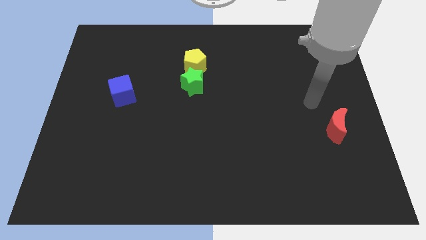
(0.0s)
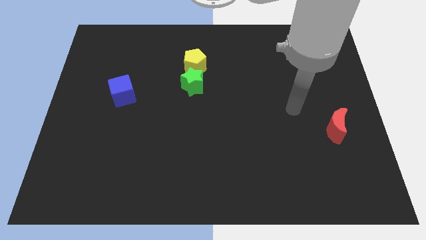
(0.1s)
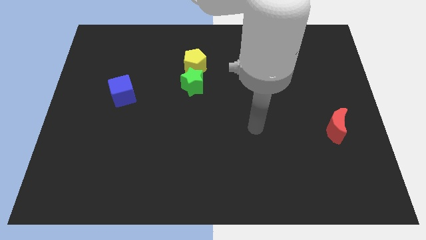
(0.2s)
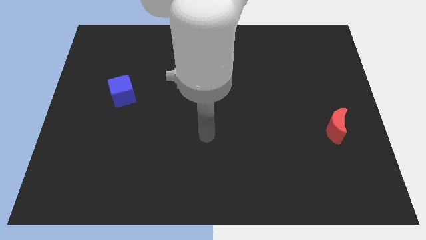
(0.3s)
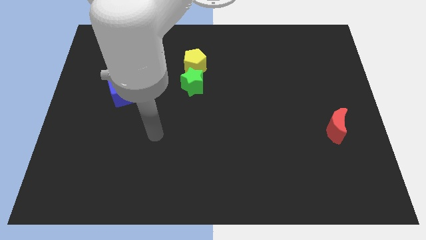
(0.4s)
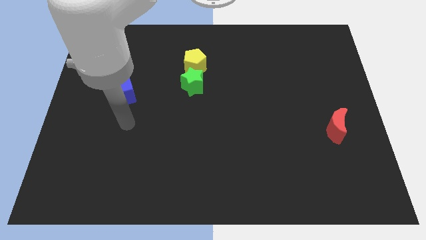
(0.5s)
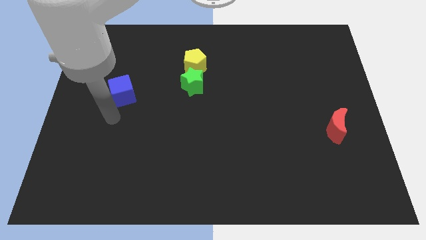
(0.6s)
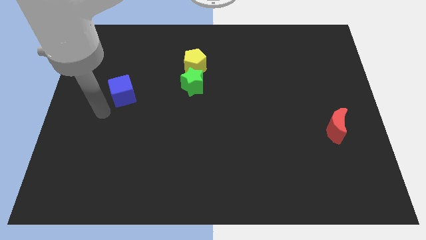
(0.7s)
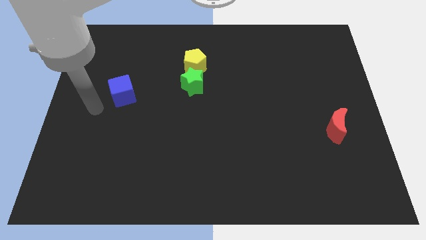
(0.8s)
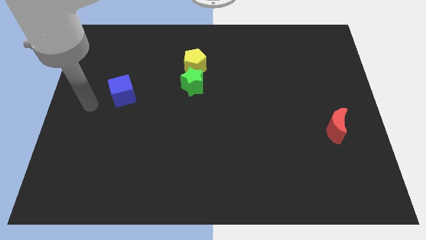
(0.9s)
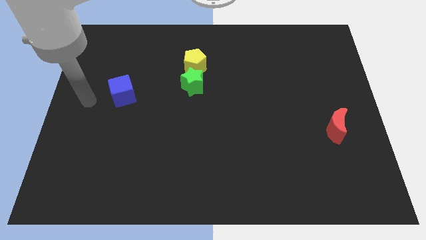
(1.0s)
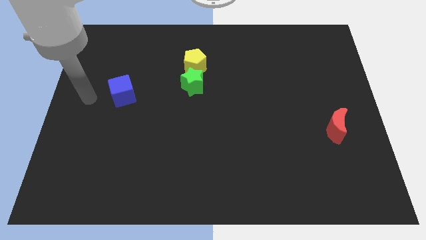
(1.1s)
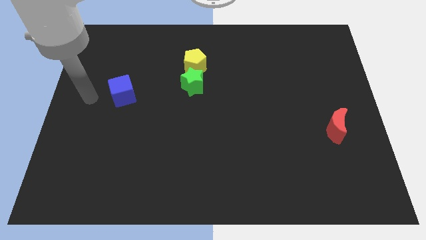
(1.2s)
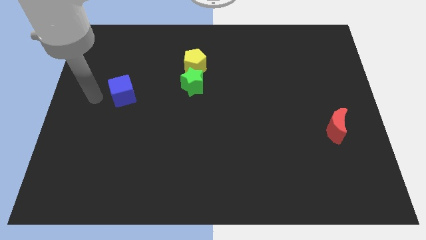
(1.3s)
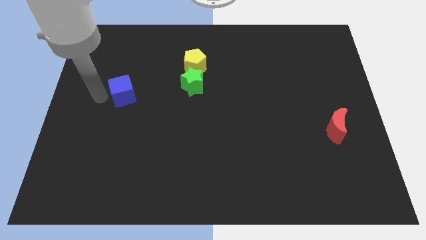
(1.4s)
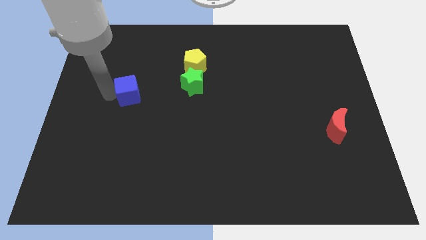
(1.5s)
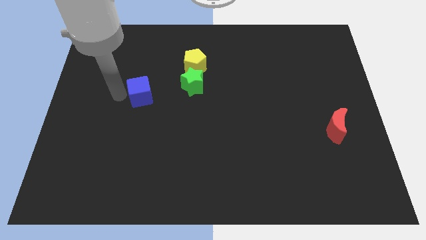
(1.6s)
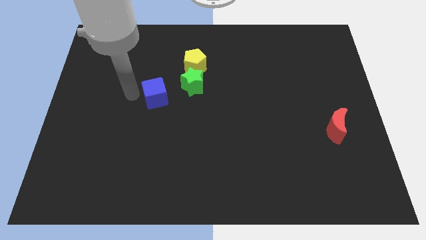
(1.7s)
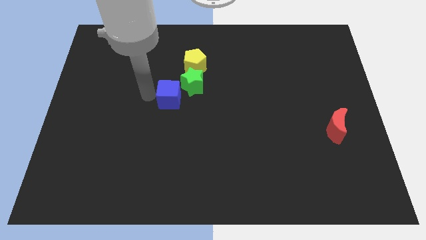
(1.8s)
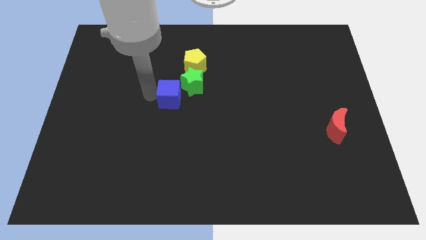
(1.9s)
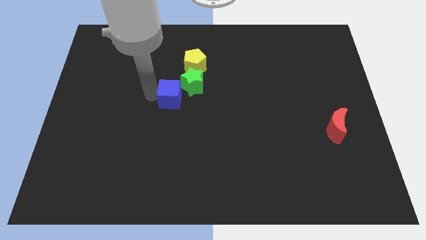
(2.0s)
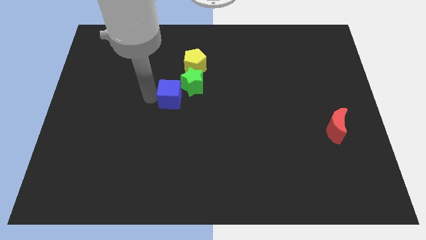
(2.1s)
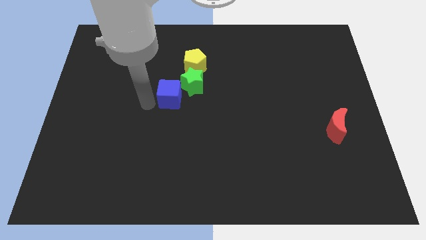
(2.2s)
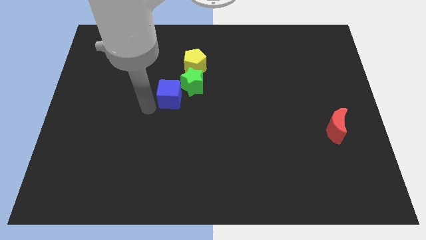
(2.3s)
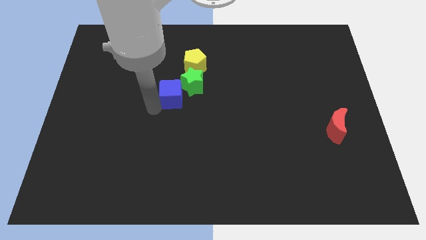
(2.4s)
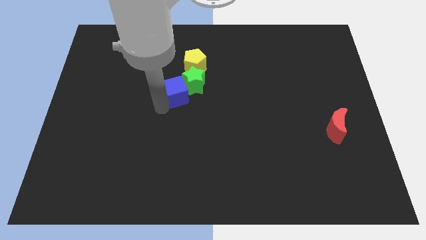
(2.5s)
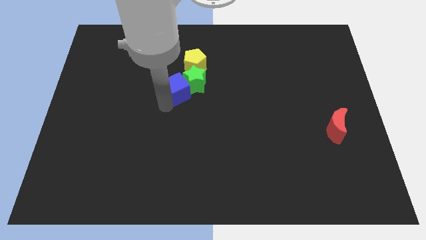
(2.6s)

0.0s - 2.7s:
push the blue block to the green star

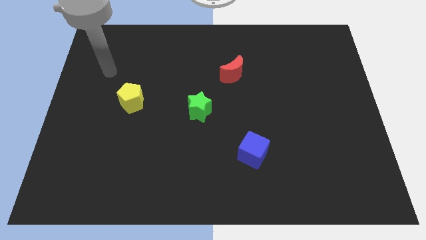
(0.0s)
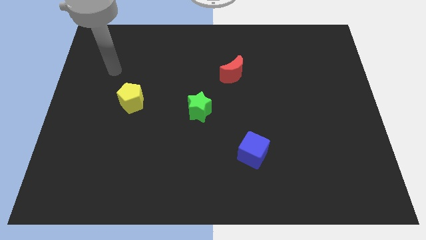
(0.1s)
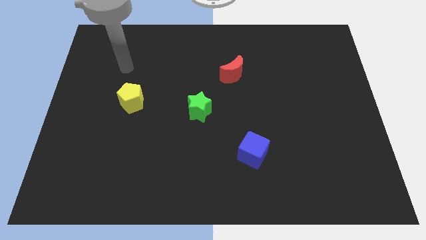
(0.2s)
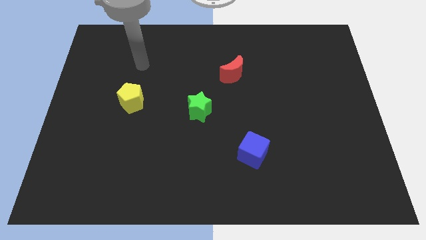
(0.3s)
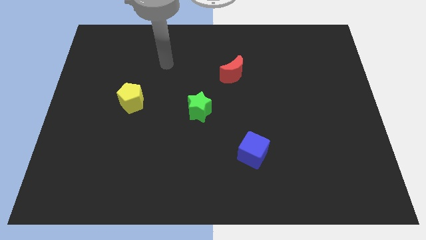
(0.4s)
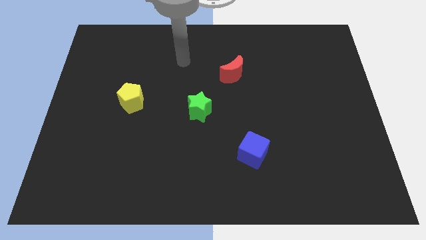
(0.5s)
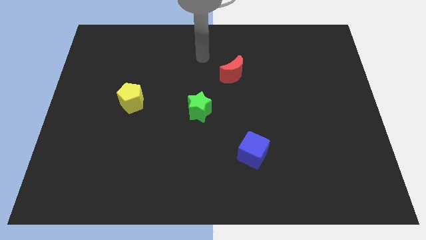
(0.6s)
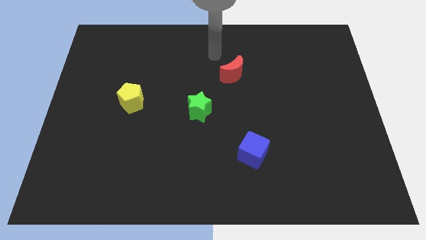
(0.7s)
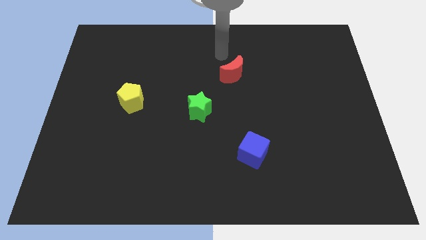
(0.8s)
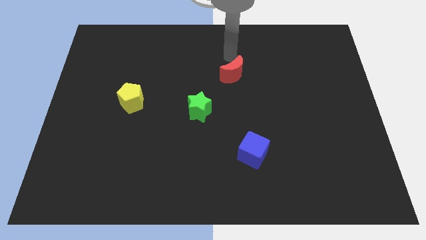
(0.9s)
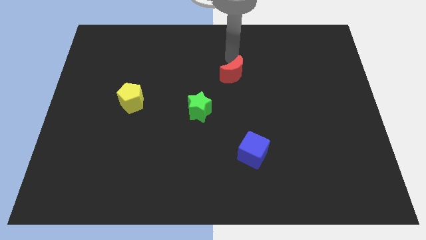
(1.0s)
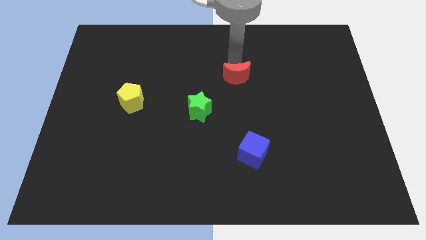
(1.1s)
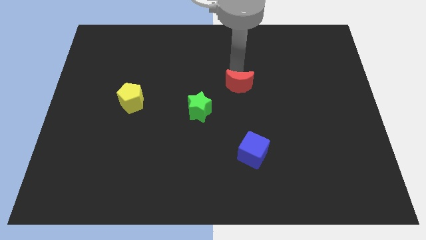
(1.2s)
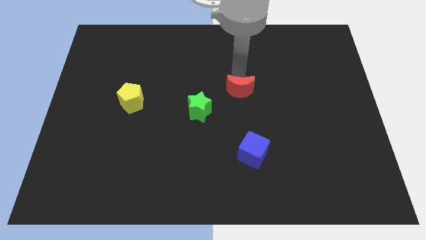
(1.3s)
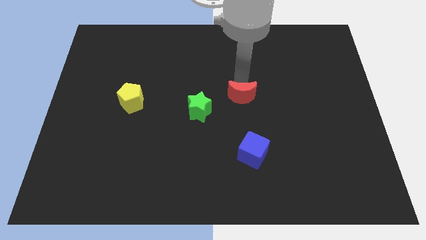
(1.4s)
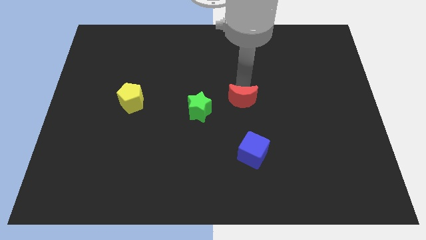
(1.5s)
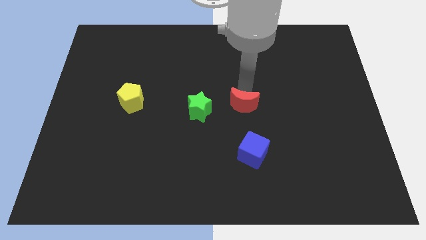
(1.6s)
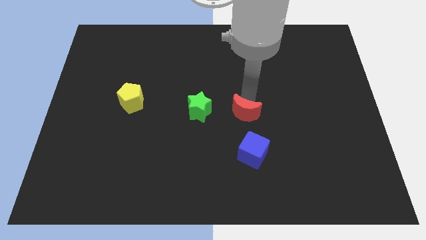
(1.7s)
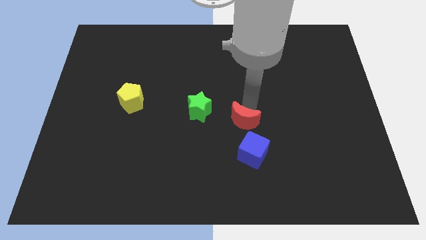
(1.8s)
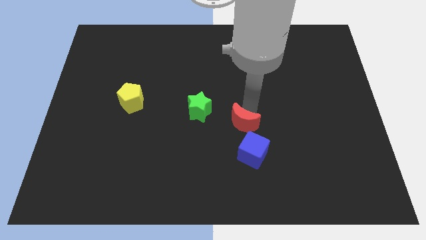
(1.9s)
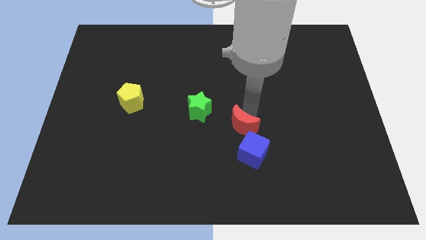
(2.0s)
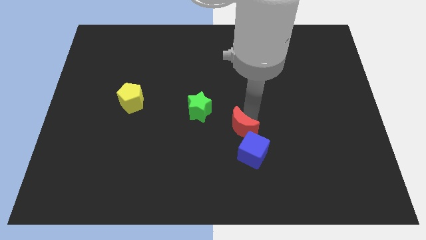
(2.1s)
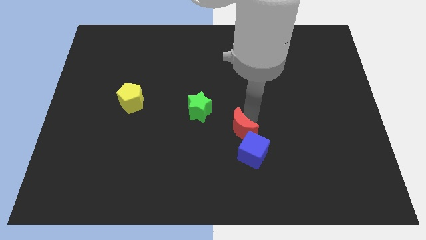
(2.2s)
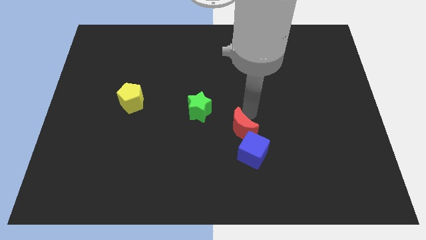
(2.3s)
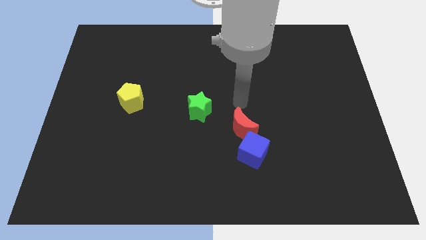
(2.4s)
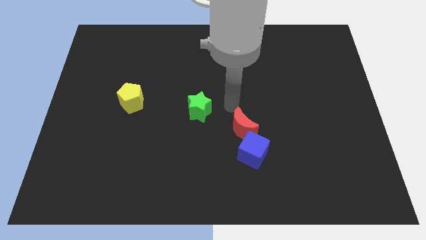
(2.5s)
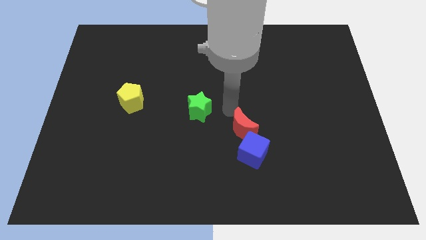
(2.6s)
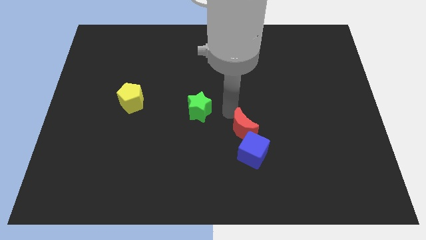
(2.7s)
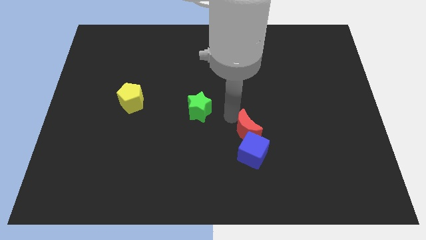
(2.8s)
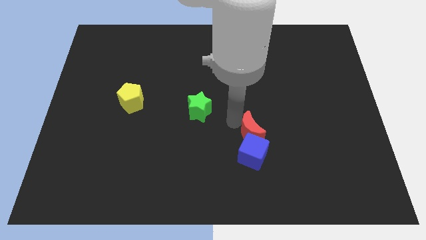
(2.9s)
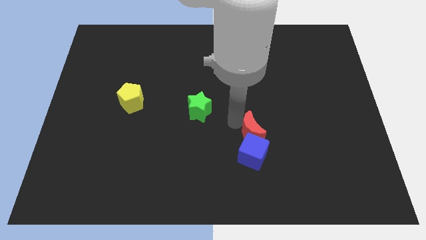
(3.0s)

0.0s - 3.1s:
move the red moon to the blue cube

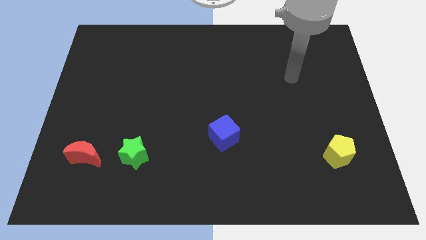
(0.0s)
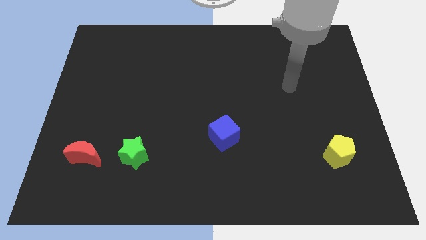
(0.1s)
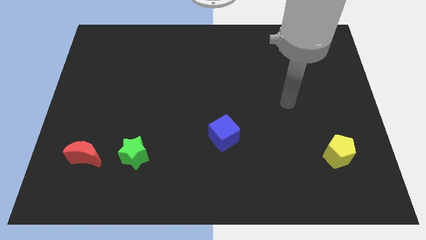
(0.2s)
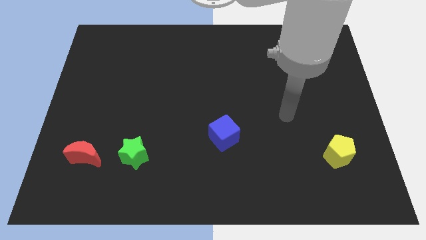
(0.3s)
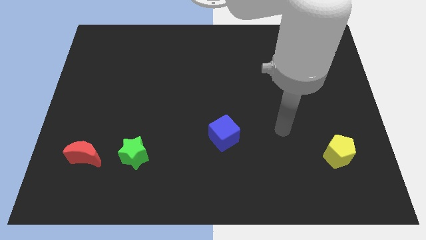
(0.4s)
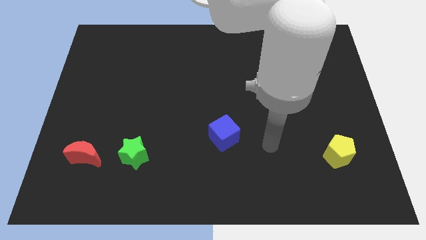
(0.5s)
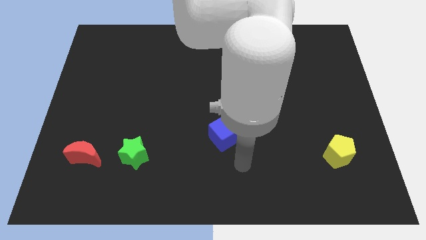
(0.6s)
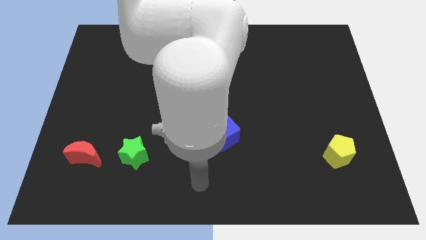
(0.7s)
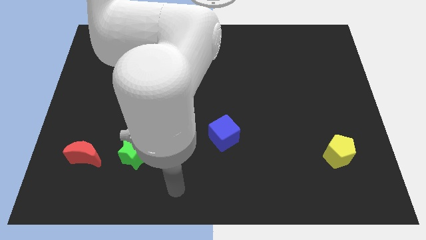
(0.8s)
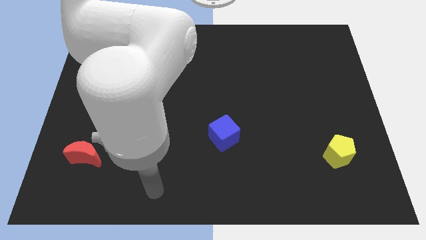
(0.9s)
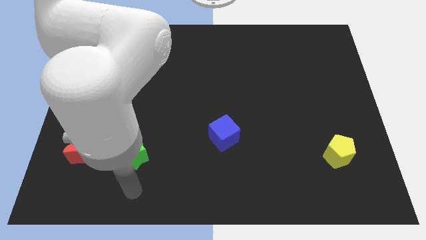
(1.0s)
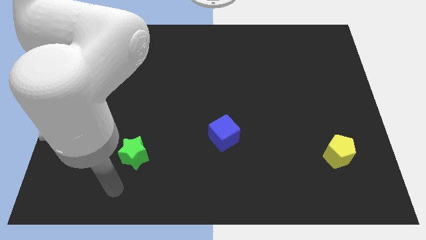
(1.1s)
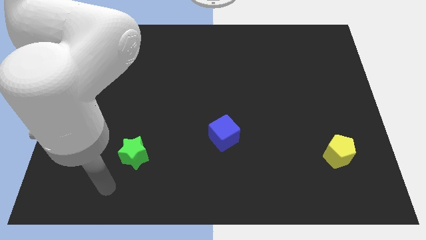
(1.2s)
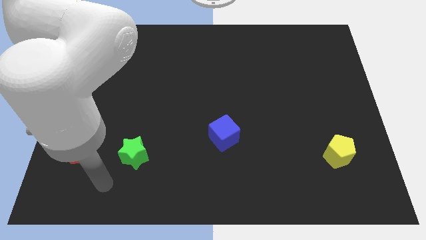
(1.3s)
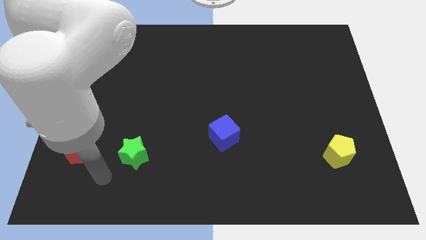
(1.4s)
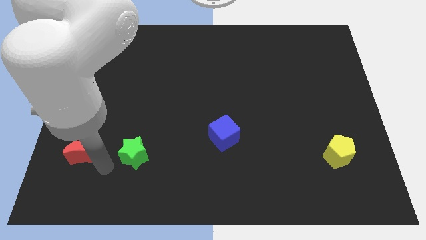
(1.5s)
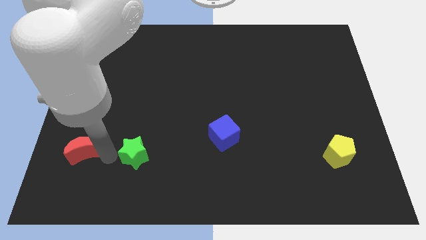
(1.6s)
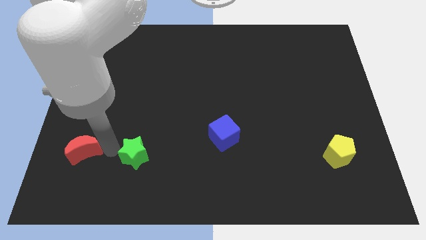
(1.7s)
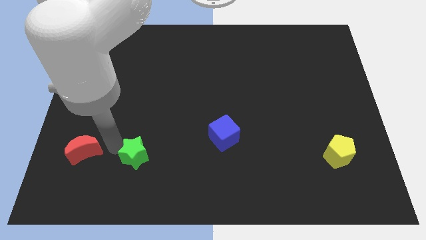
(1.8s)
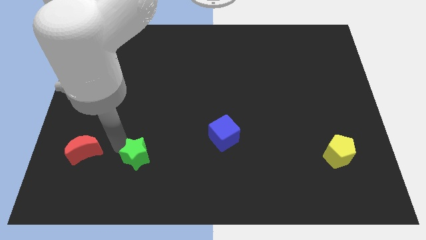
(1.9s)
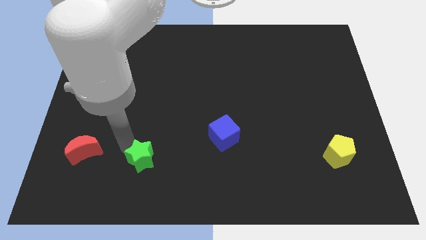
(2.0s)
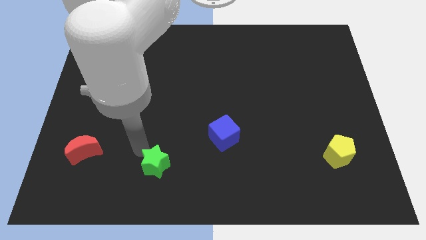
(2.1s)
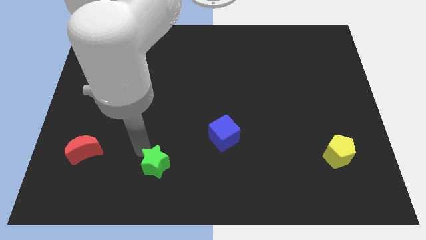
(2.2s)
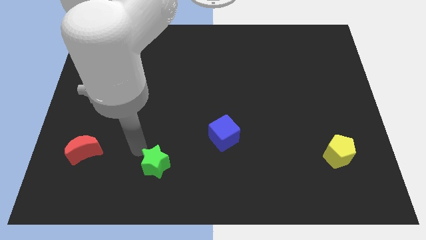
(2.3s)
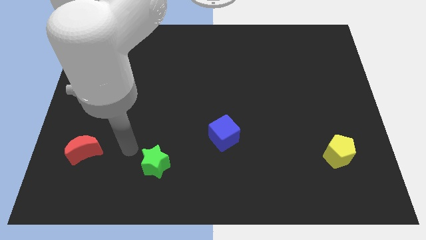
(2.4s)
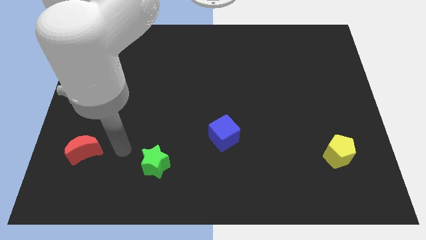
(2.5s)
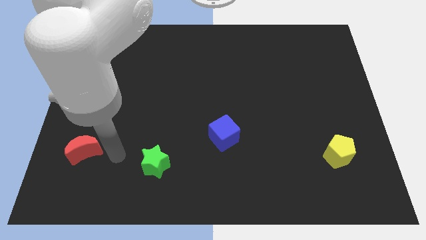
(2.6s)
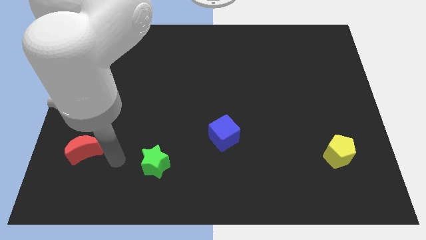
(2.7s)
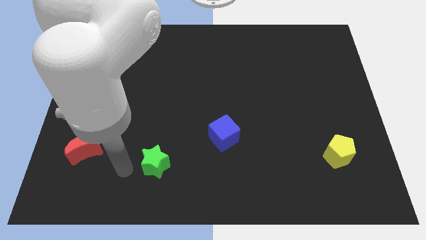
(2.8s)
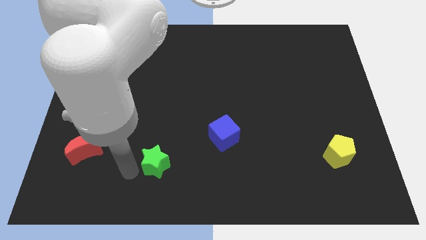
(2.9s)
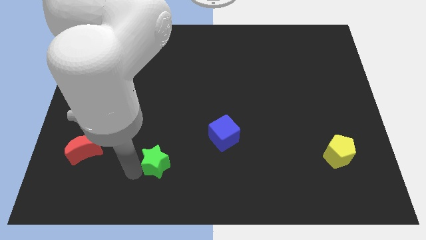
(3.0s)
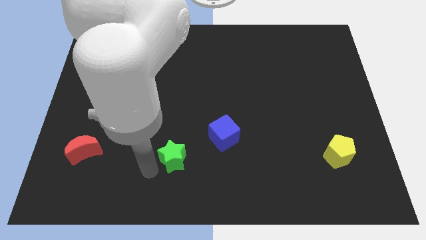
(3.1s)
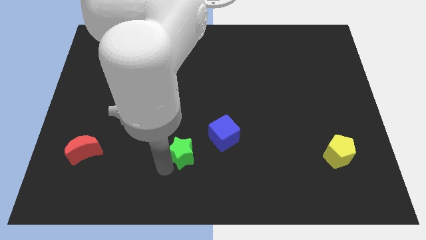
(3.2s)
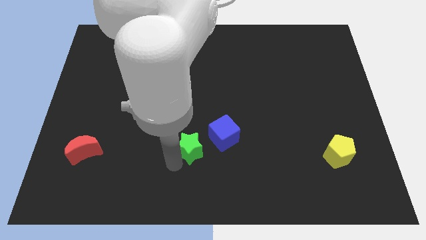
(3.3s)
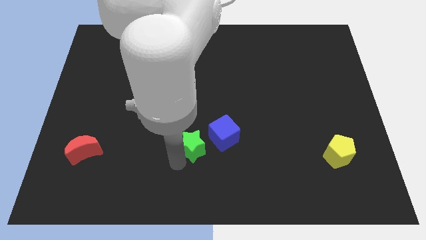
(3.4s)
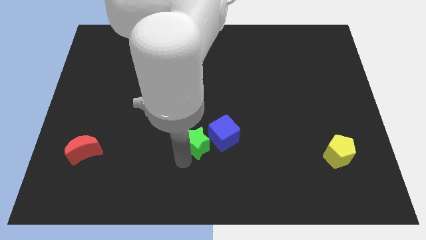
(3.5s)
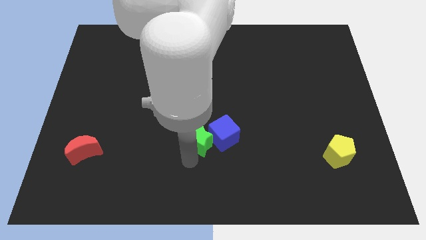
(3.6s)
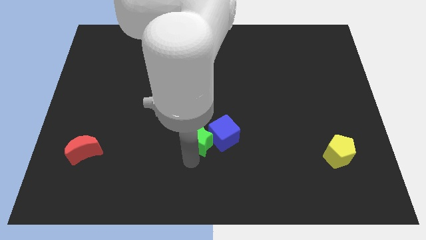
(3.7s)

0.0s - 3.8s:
move the green block next to the blue block
